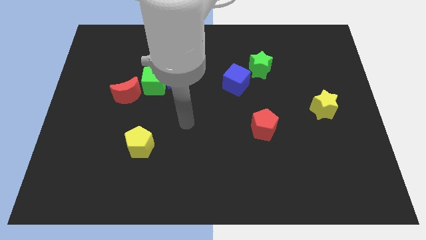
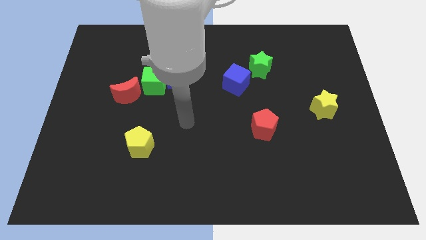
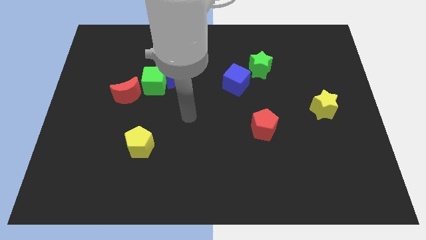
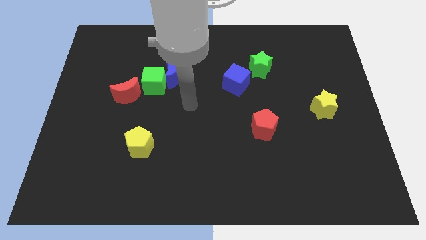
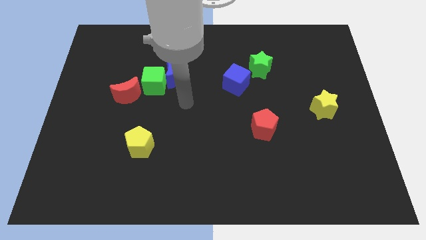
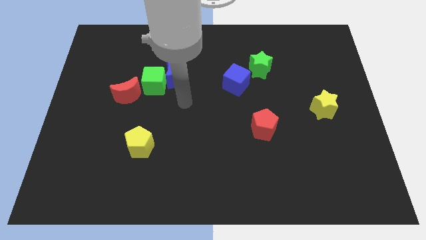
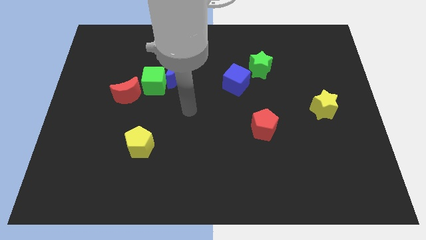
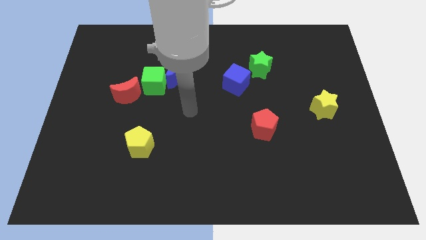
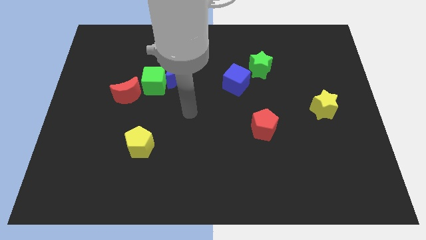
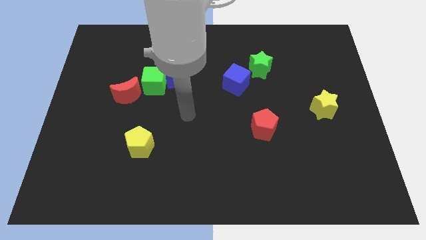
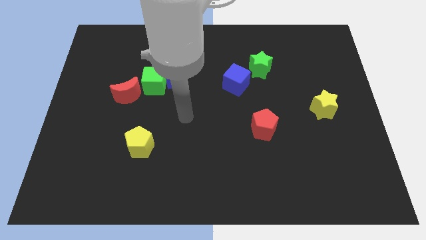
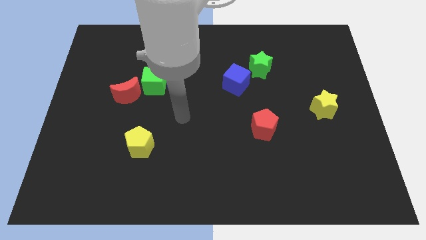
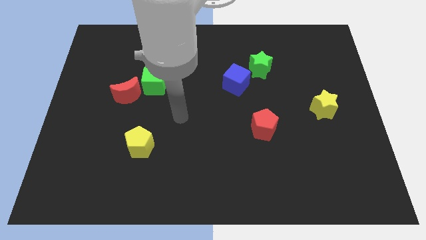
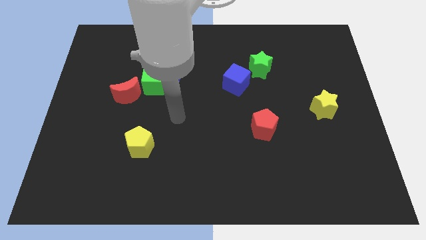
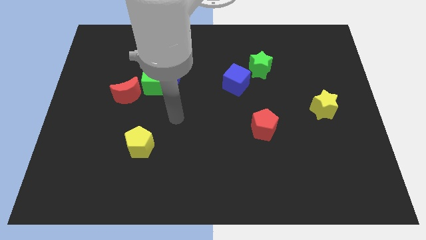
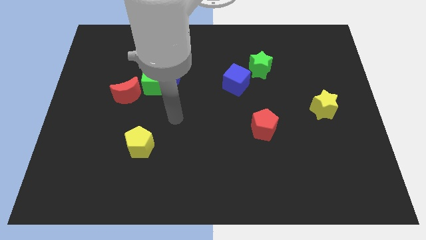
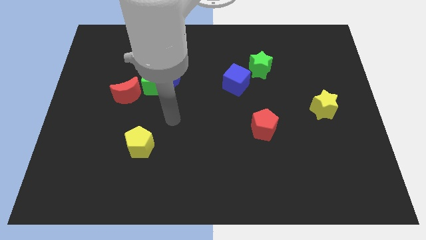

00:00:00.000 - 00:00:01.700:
move your arm in between yellow pentagon and the blue cube

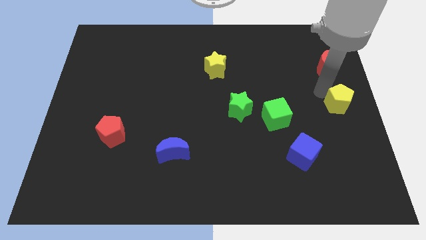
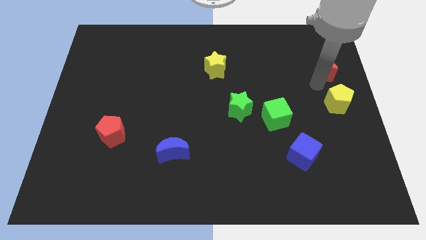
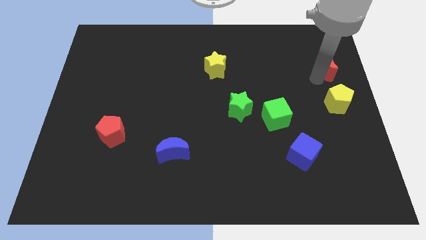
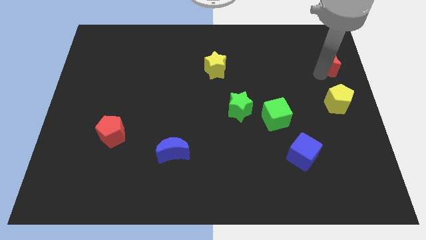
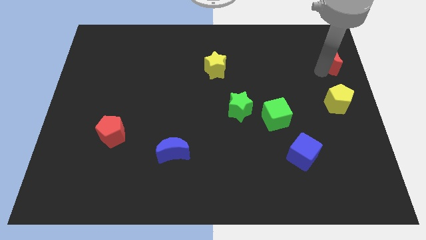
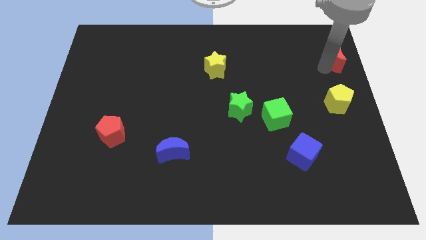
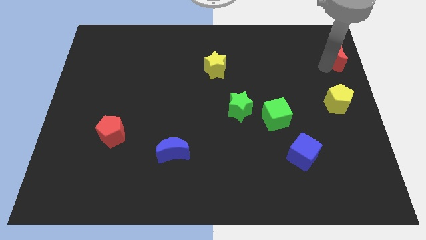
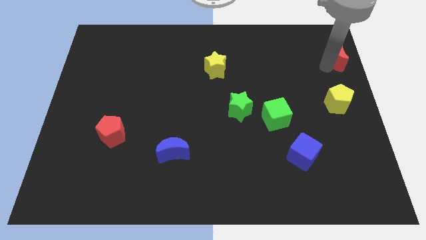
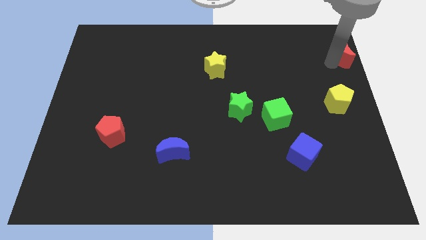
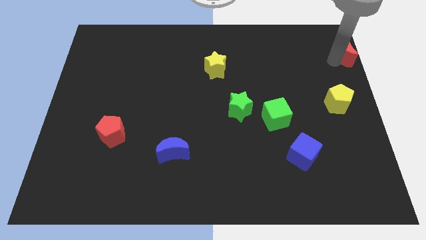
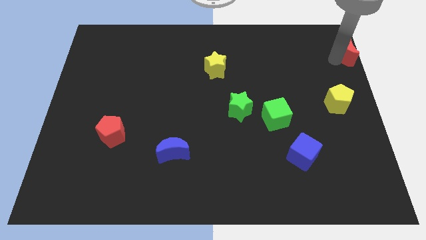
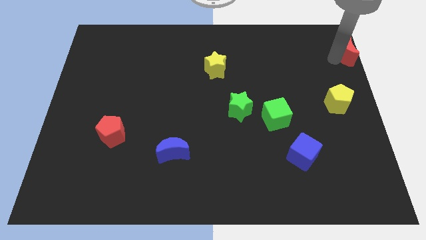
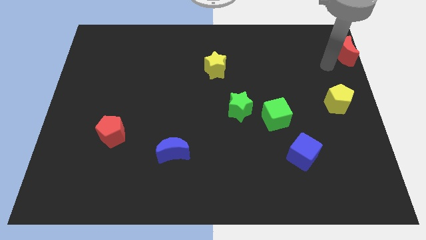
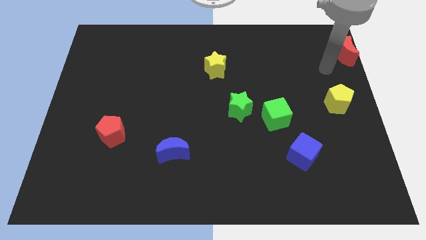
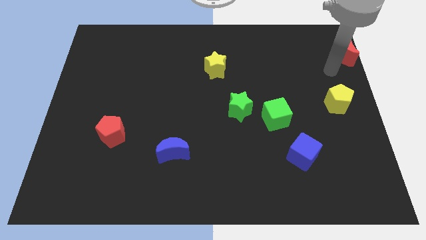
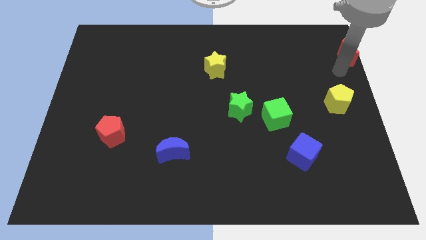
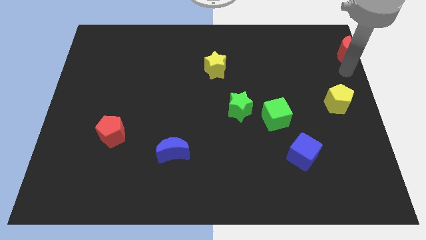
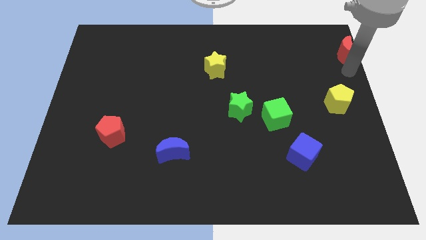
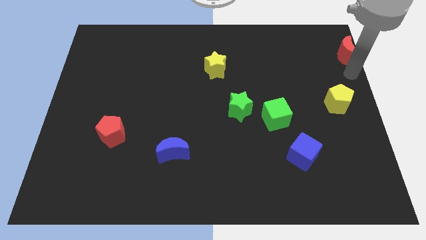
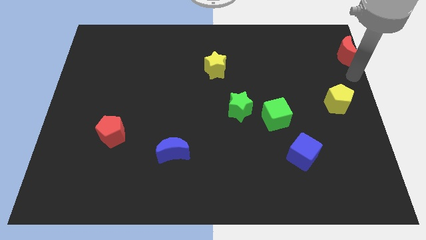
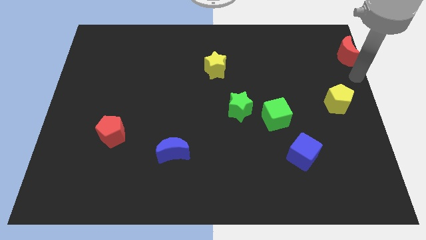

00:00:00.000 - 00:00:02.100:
slide red moon towards top right

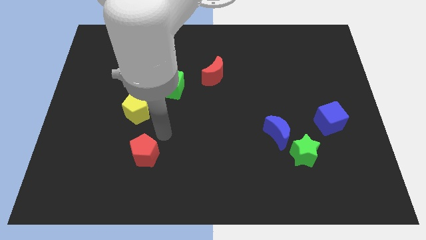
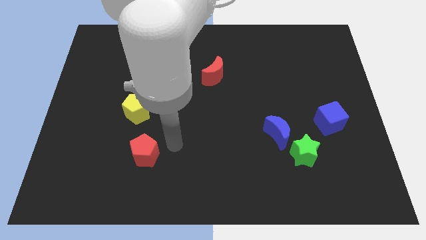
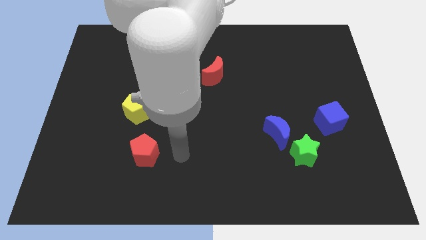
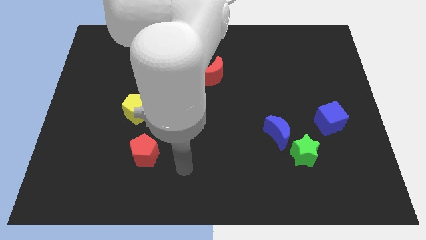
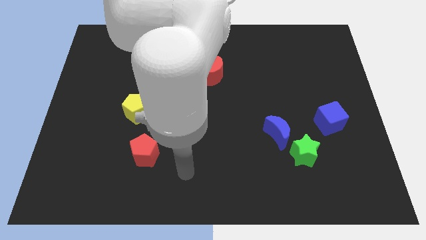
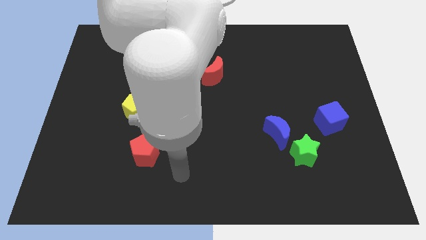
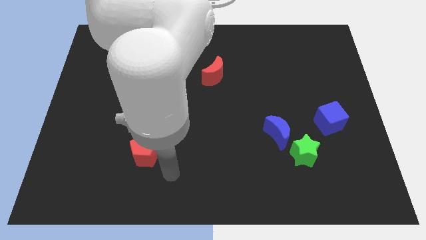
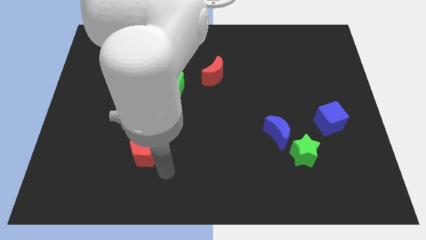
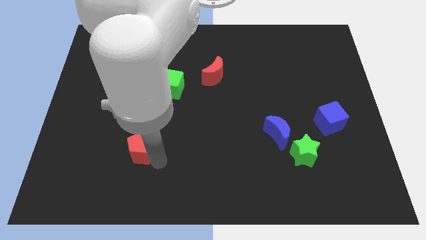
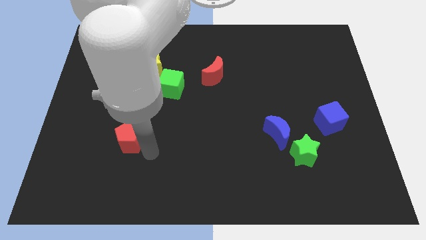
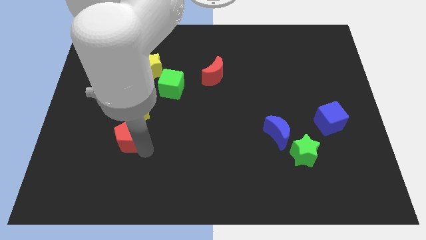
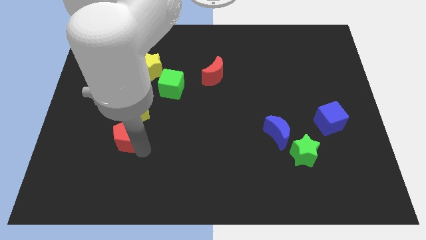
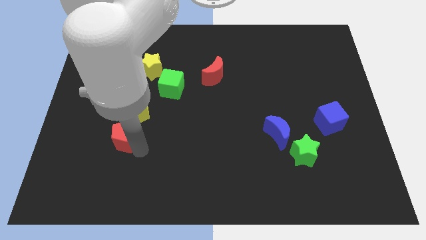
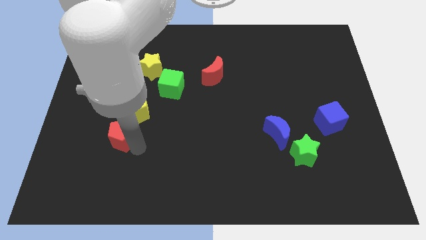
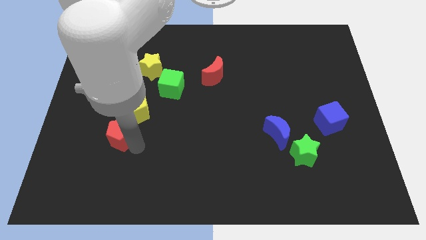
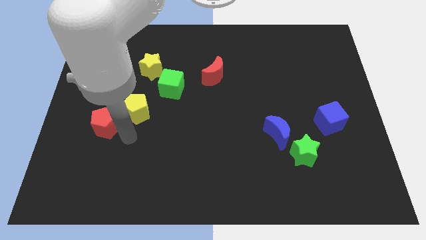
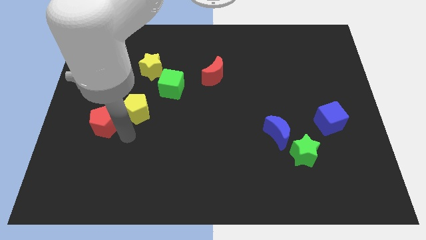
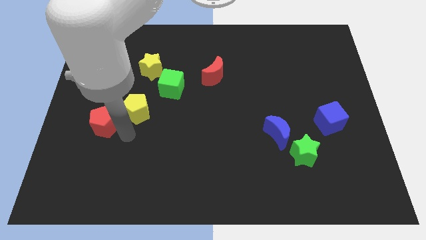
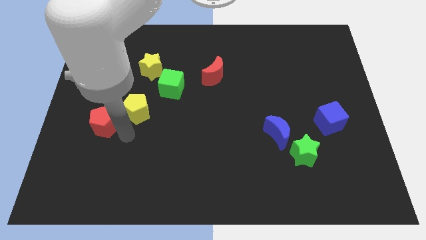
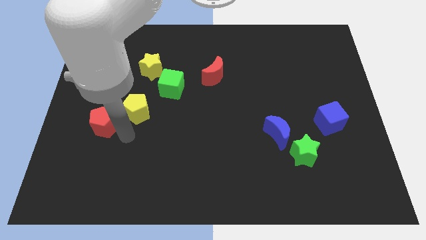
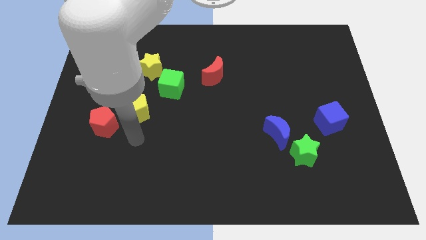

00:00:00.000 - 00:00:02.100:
push the red pentagon to the bottom left side of the yellow pentagon

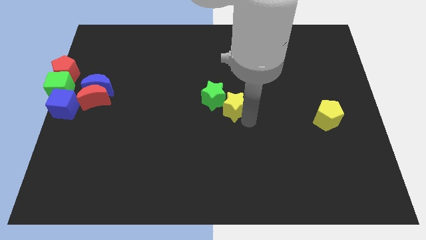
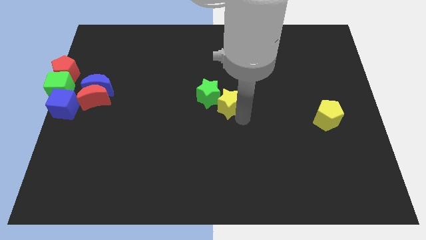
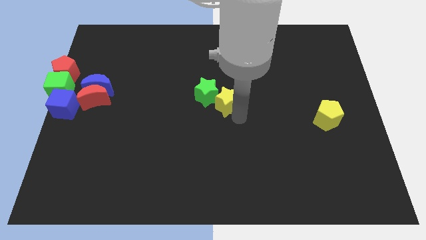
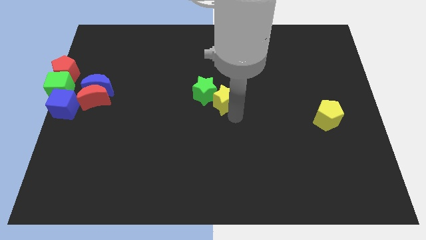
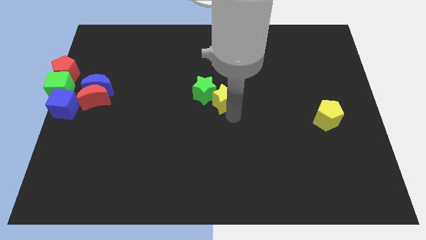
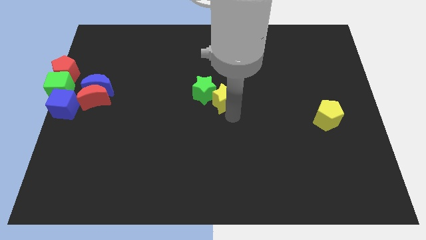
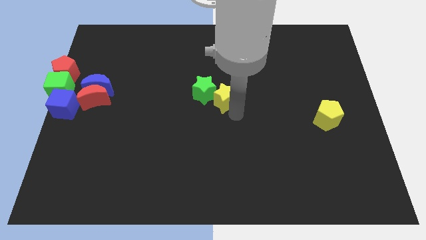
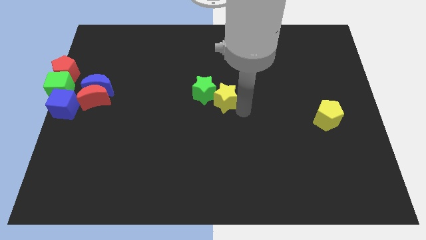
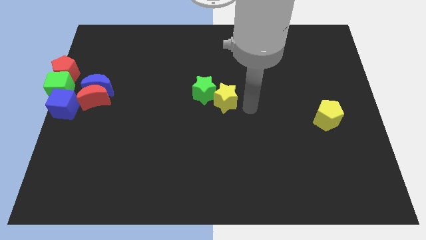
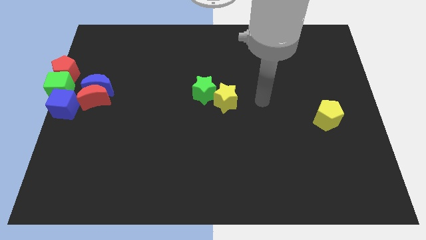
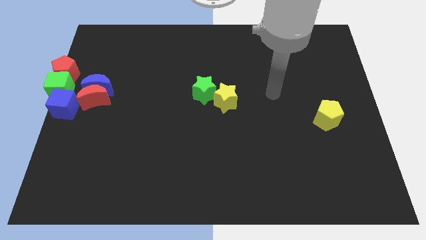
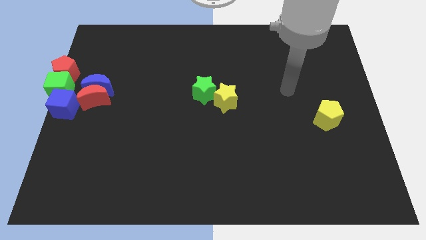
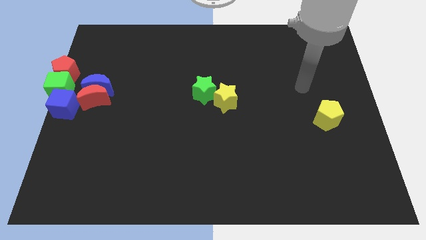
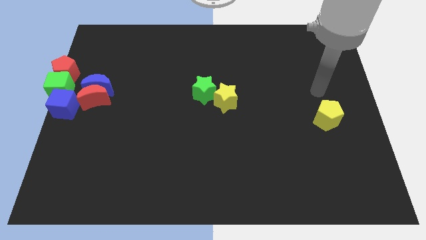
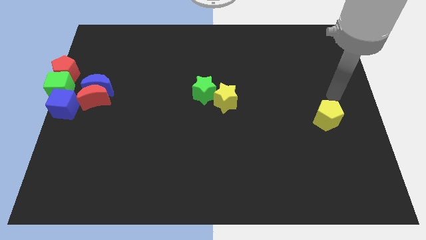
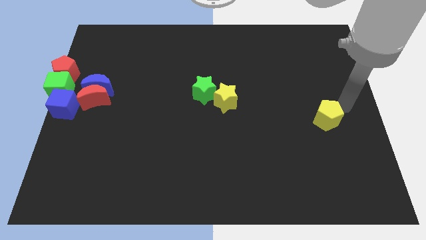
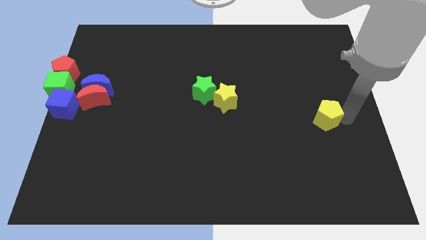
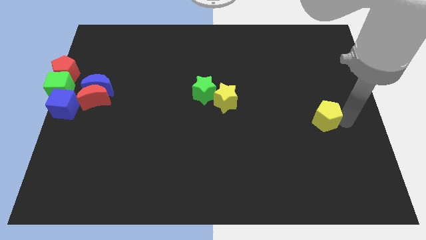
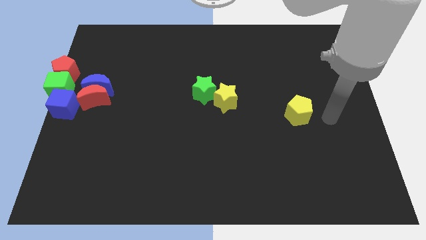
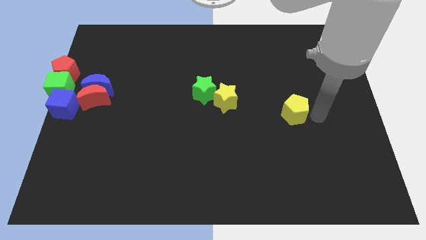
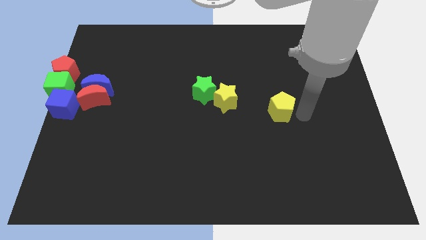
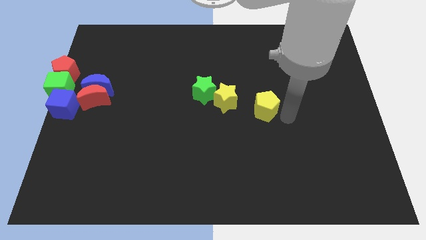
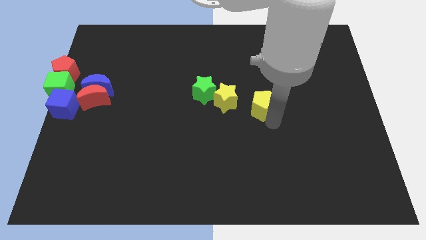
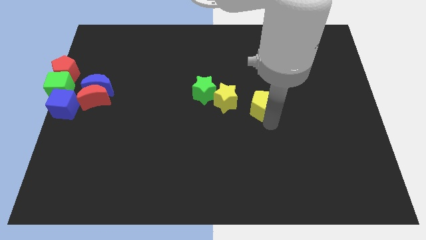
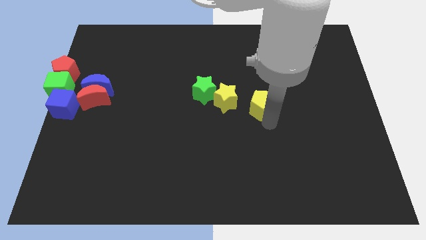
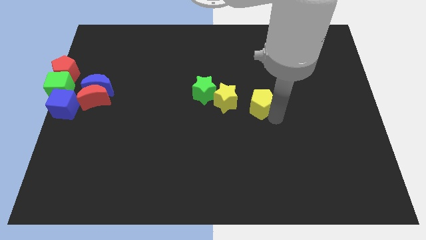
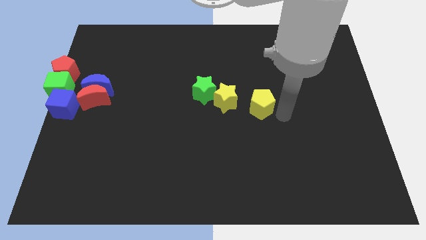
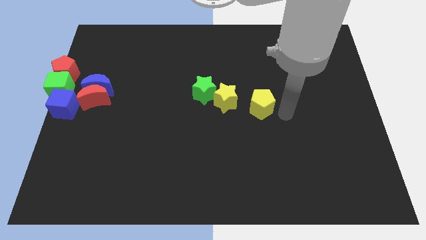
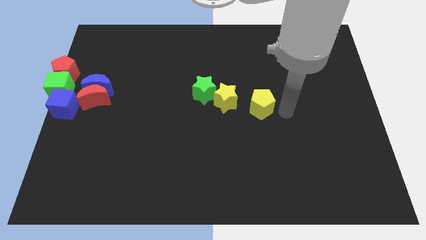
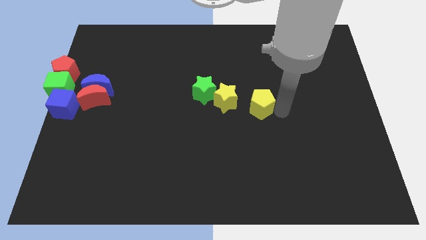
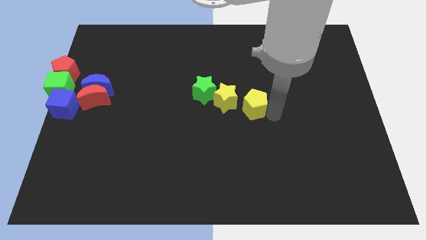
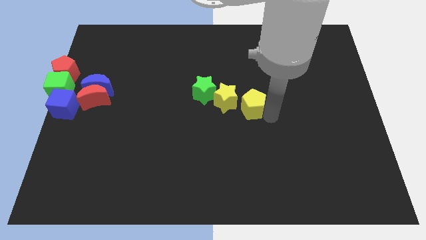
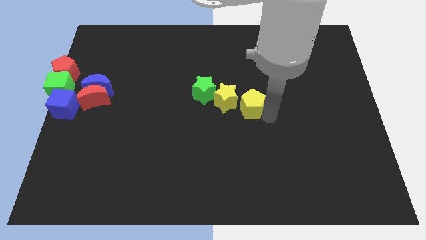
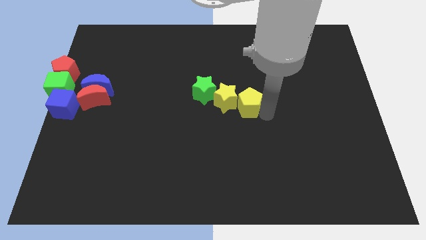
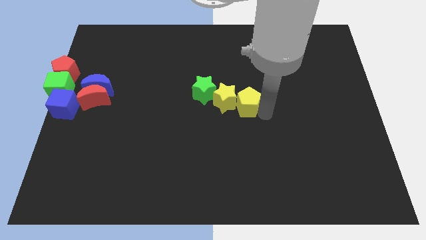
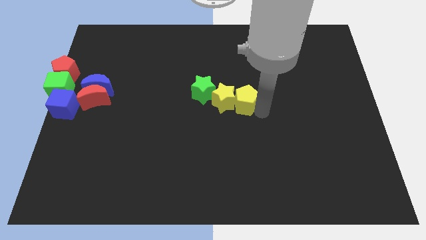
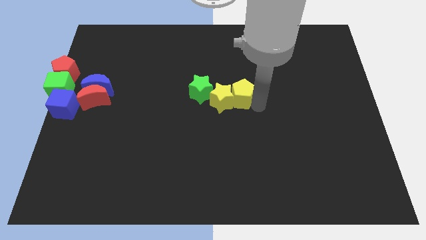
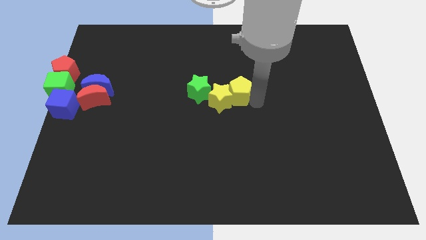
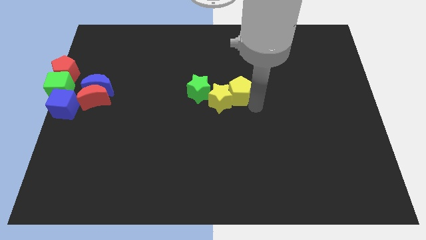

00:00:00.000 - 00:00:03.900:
push the yellow green star and yellow star with the yellow pentagon towards the center of the board
